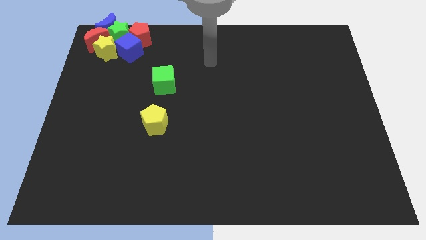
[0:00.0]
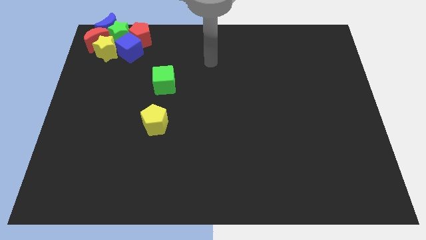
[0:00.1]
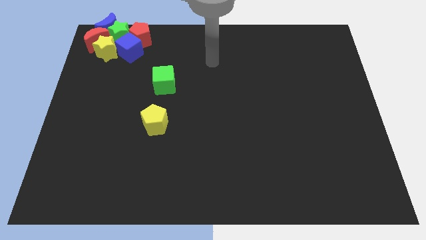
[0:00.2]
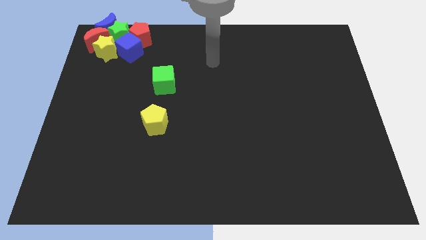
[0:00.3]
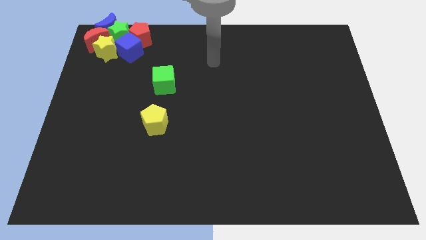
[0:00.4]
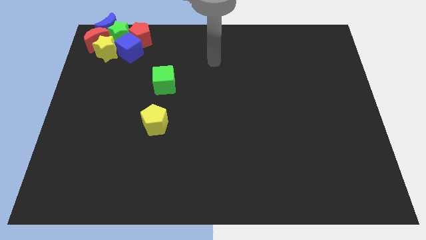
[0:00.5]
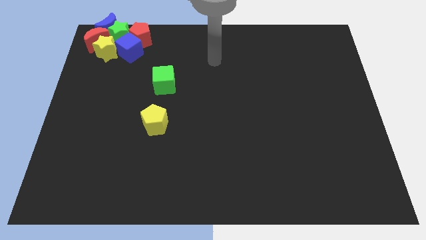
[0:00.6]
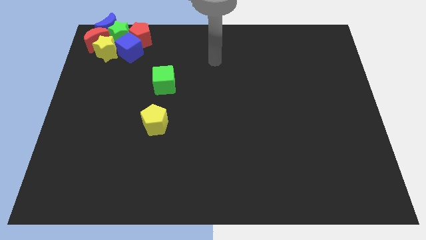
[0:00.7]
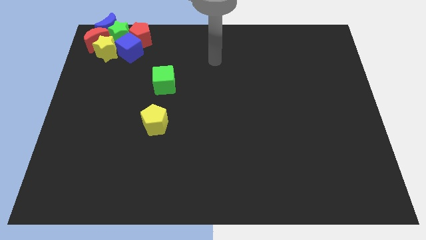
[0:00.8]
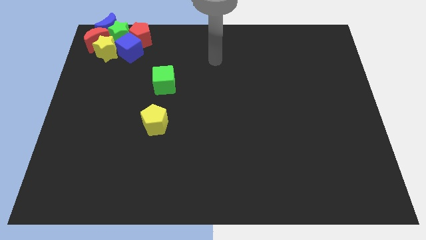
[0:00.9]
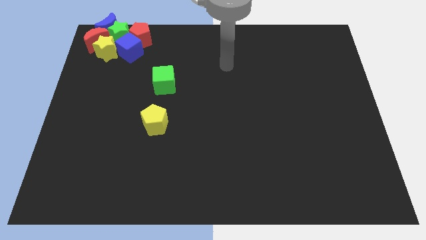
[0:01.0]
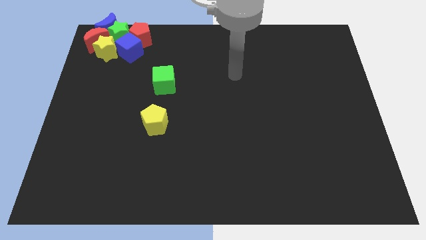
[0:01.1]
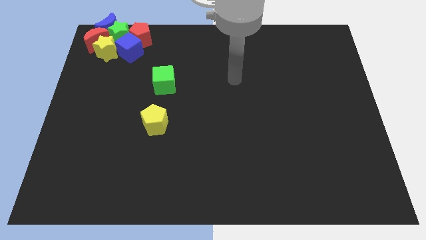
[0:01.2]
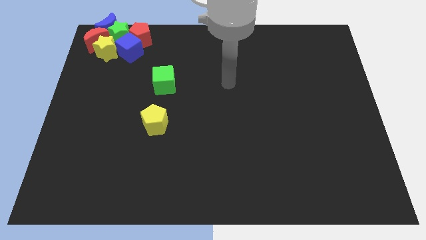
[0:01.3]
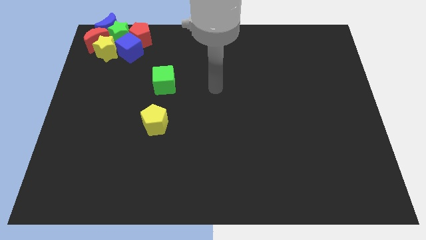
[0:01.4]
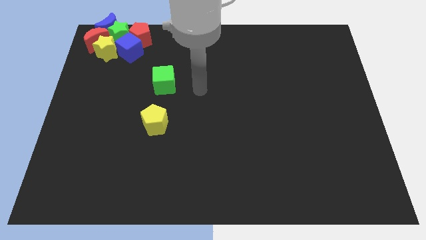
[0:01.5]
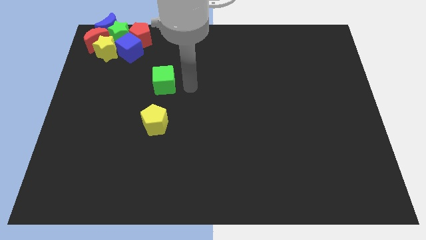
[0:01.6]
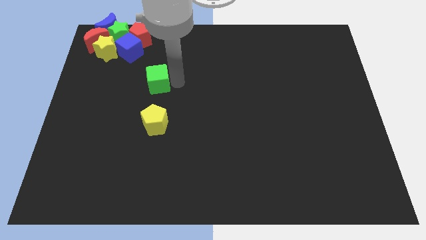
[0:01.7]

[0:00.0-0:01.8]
point the arm to the right of the green cube

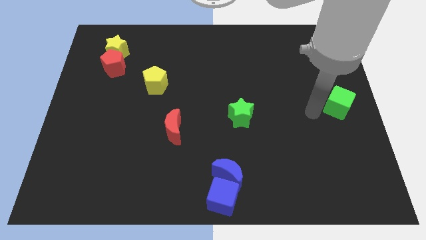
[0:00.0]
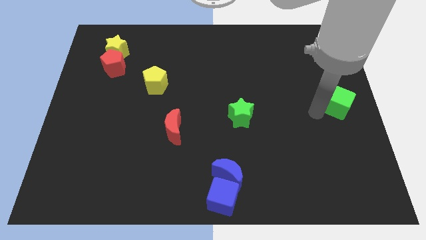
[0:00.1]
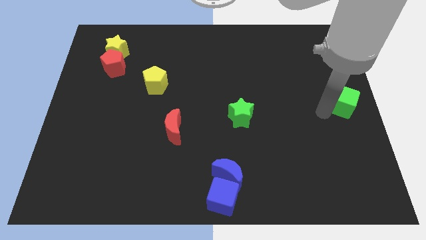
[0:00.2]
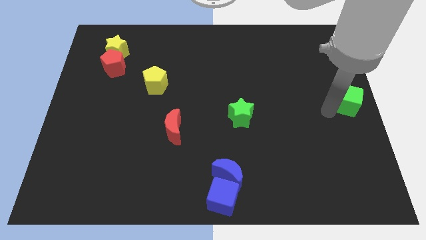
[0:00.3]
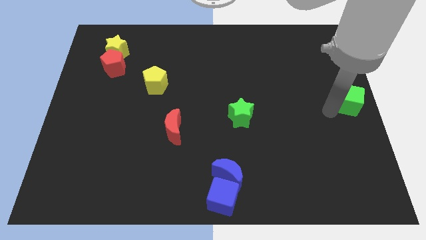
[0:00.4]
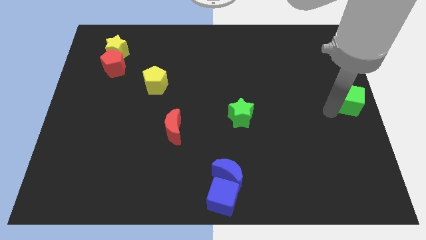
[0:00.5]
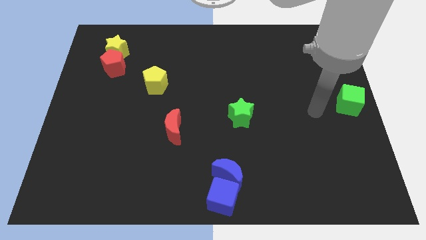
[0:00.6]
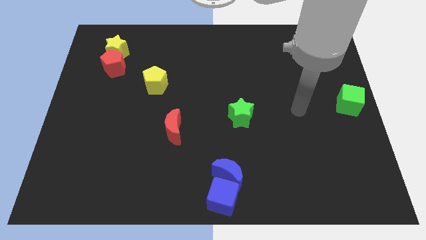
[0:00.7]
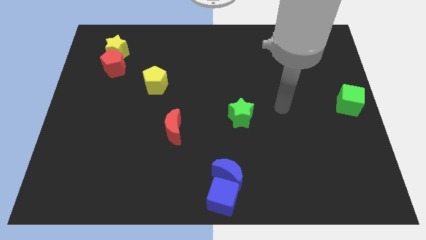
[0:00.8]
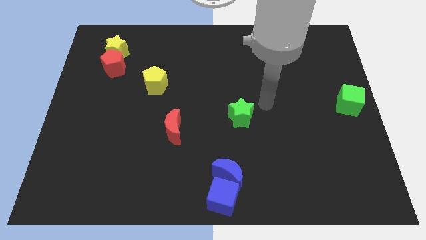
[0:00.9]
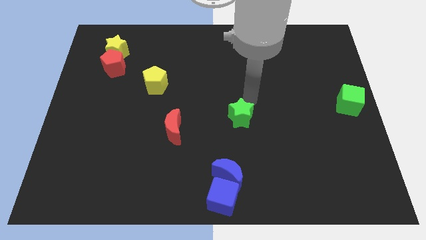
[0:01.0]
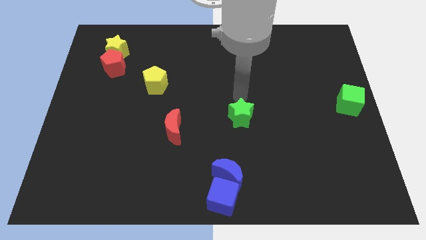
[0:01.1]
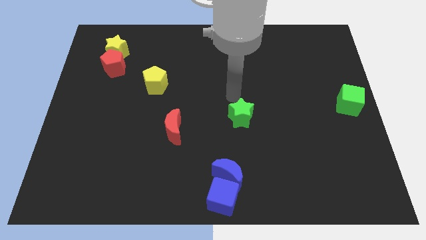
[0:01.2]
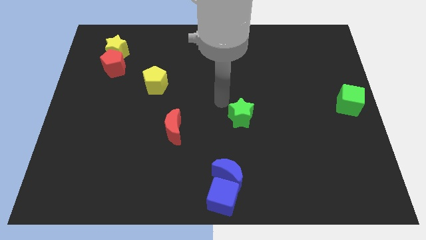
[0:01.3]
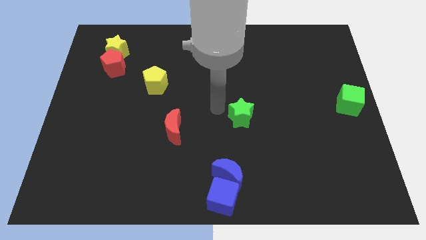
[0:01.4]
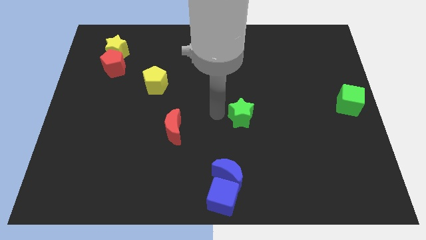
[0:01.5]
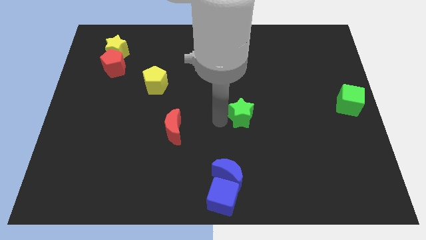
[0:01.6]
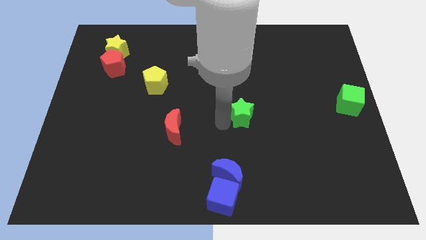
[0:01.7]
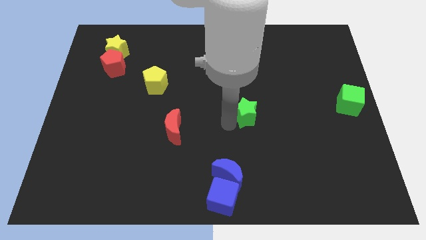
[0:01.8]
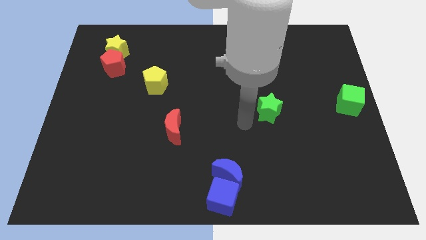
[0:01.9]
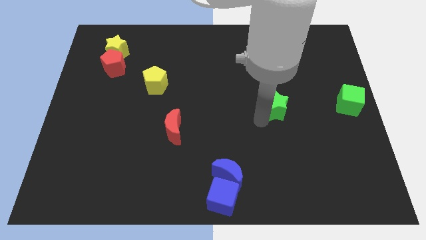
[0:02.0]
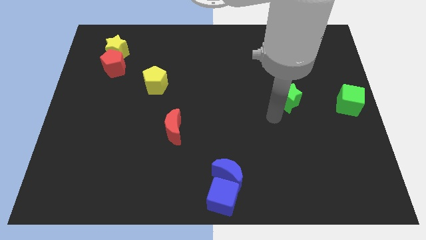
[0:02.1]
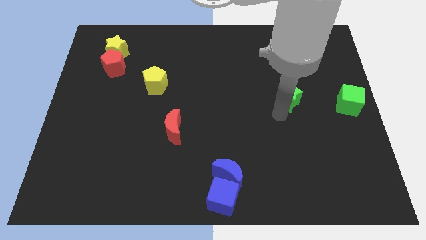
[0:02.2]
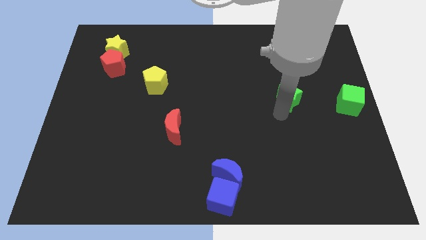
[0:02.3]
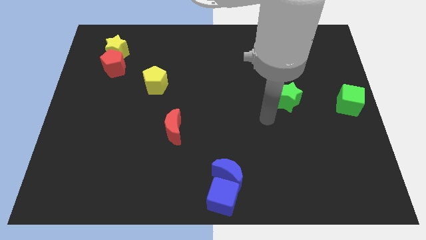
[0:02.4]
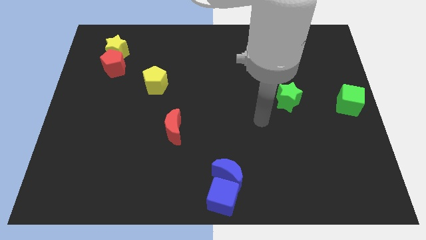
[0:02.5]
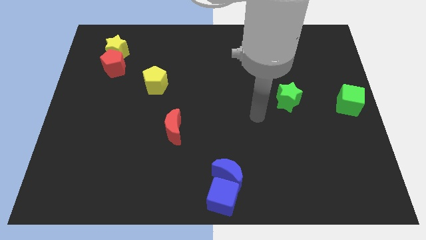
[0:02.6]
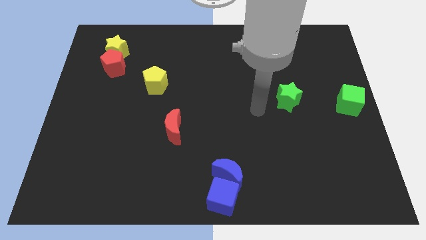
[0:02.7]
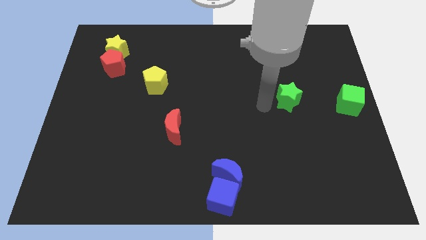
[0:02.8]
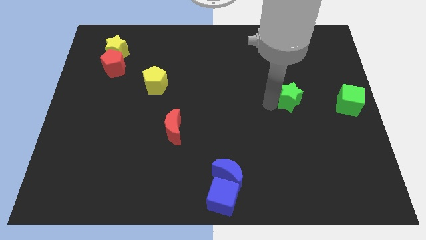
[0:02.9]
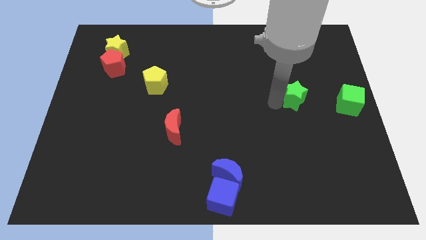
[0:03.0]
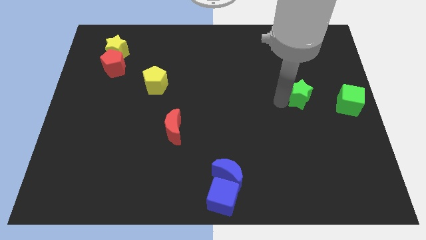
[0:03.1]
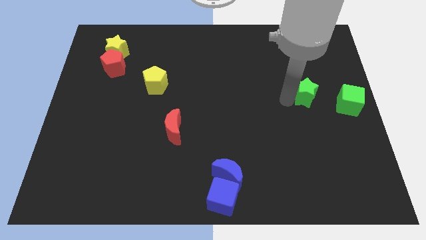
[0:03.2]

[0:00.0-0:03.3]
move the green star towards the green cube

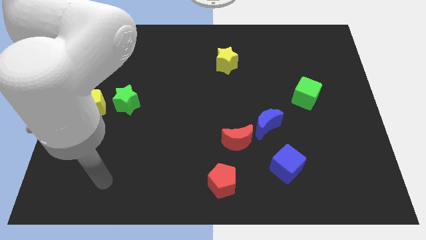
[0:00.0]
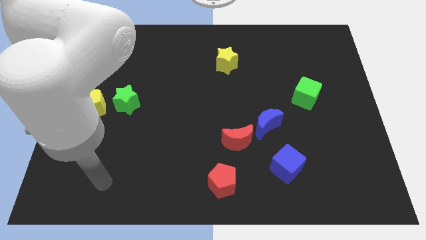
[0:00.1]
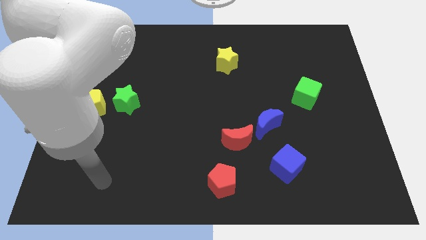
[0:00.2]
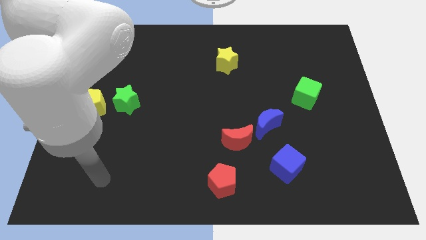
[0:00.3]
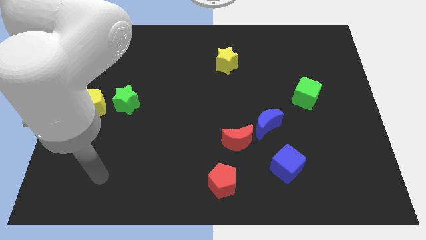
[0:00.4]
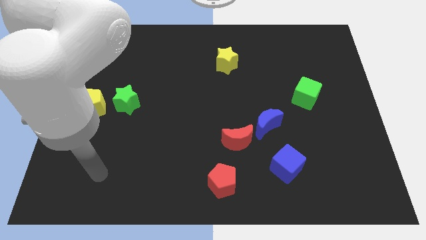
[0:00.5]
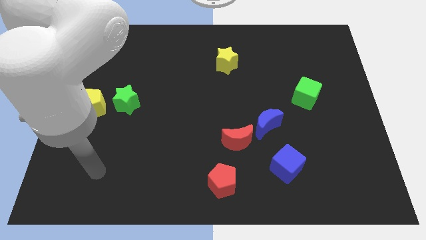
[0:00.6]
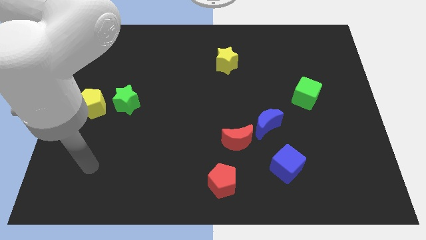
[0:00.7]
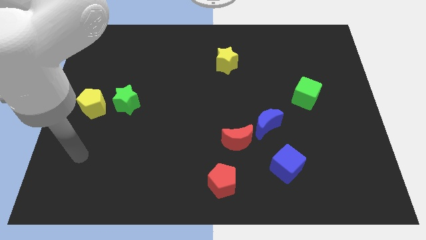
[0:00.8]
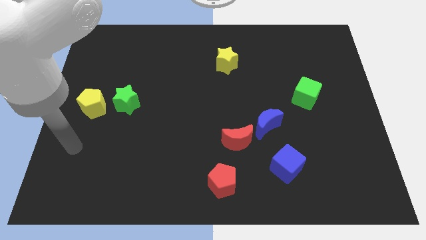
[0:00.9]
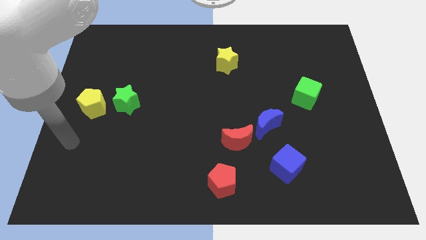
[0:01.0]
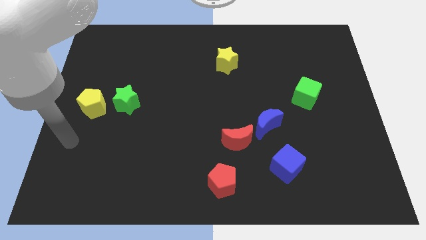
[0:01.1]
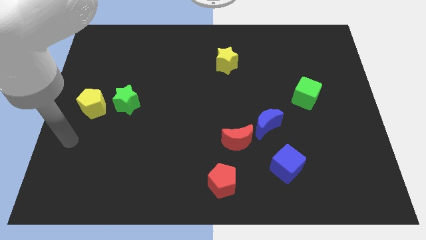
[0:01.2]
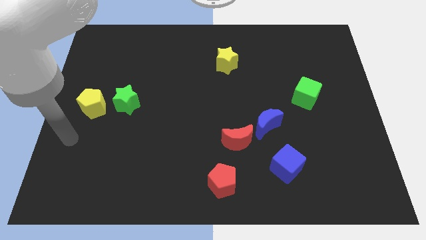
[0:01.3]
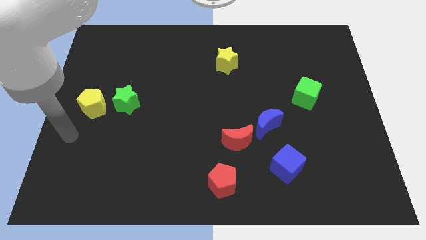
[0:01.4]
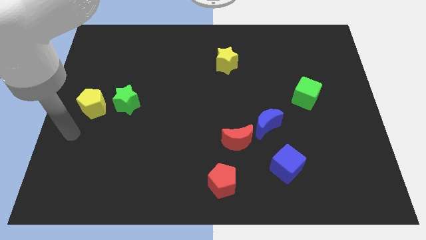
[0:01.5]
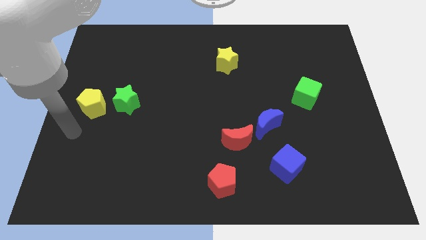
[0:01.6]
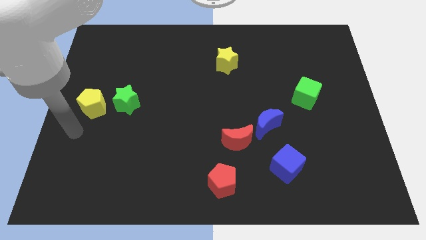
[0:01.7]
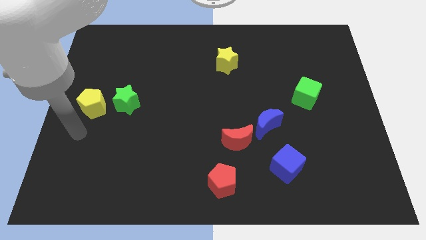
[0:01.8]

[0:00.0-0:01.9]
move the pointer towards the center left

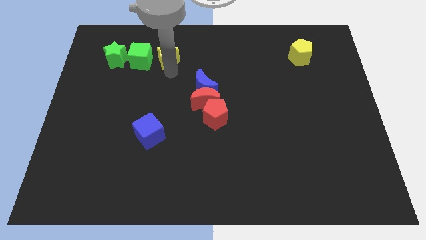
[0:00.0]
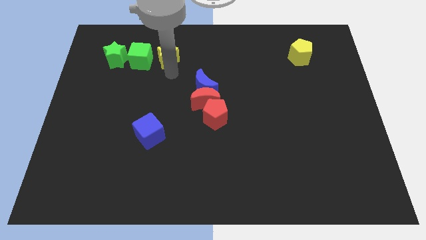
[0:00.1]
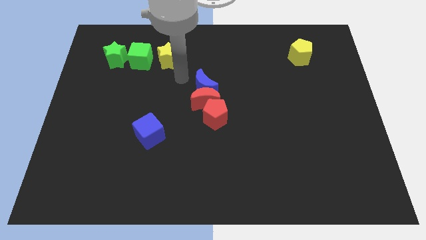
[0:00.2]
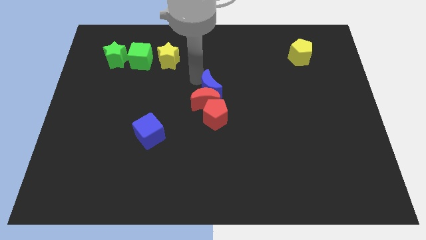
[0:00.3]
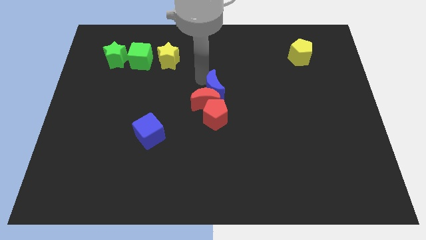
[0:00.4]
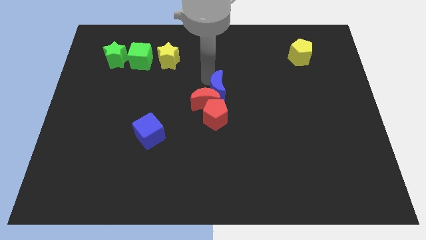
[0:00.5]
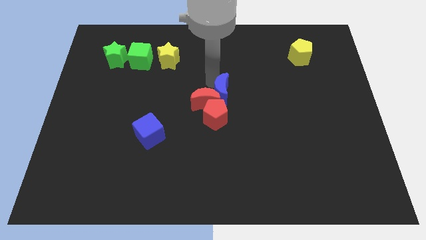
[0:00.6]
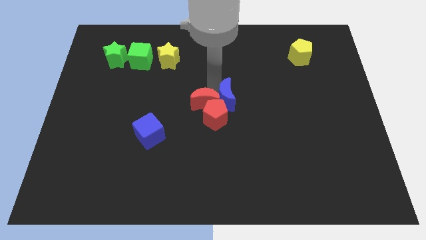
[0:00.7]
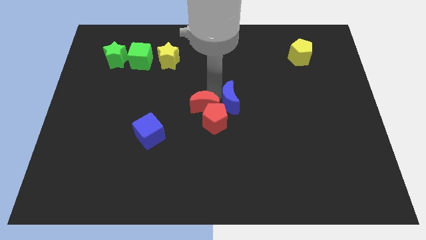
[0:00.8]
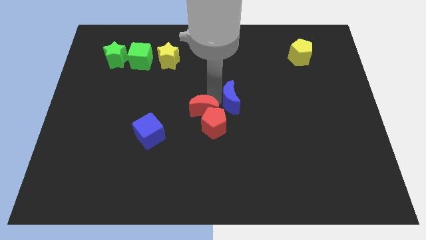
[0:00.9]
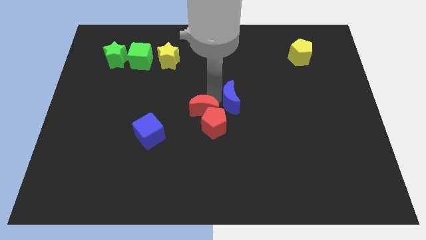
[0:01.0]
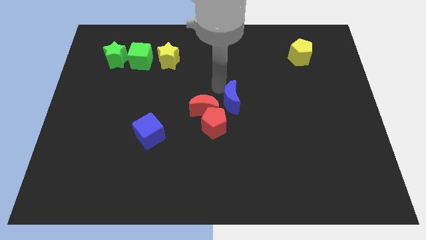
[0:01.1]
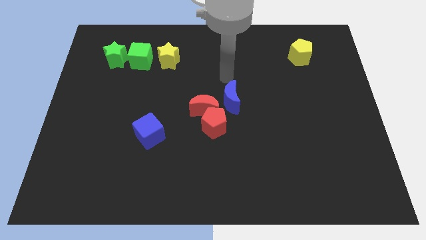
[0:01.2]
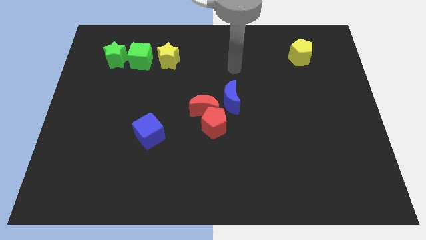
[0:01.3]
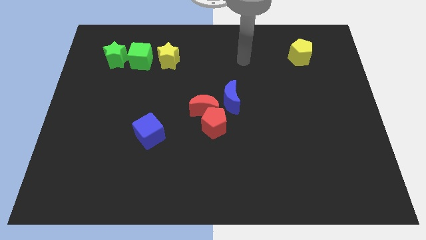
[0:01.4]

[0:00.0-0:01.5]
push the red blocks and blue moon in different directions

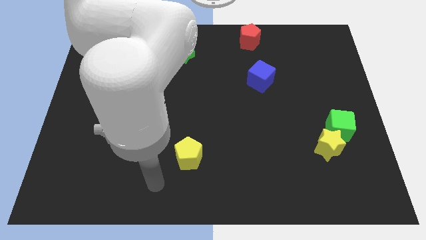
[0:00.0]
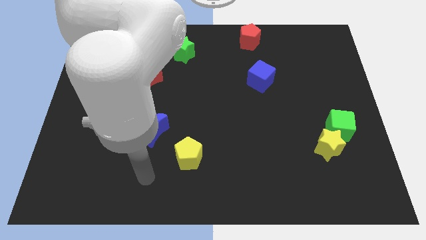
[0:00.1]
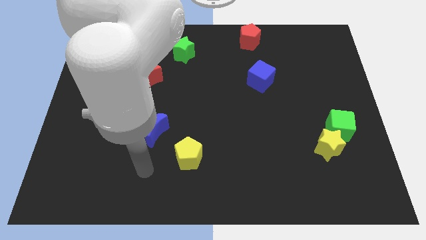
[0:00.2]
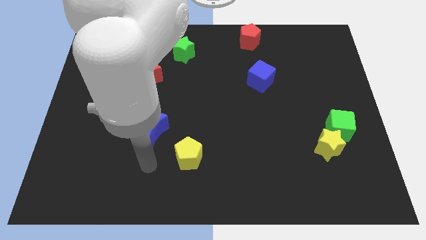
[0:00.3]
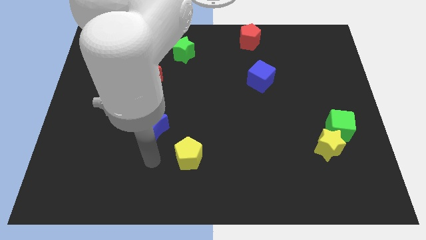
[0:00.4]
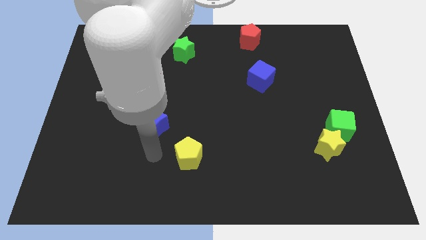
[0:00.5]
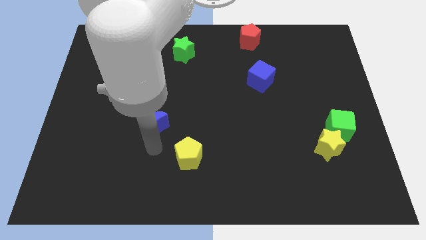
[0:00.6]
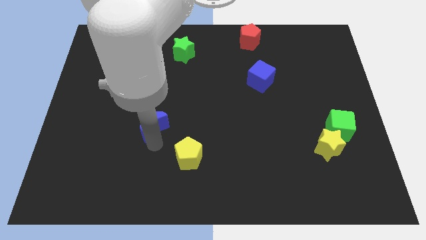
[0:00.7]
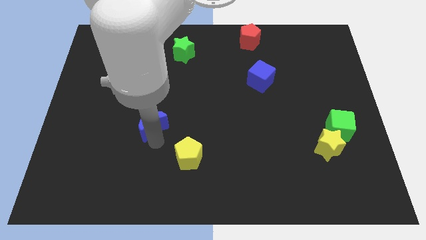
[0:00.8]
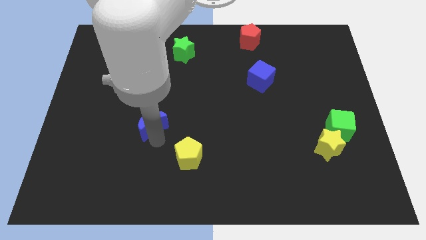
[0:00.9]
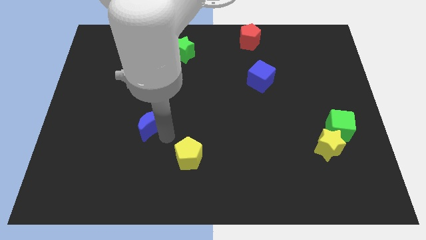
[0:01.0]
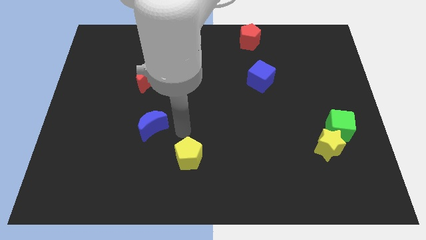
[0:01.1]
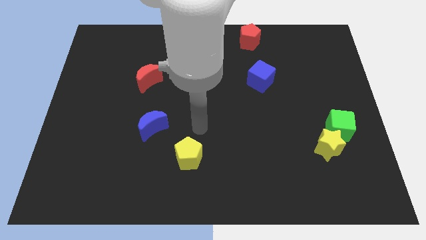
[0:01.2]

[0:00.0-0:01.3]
slightly touch the blue moon
